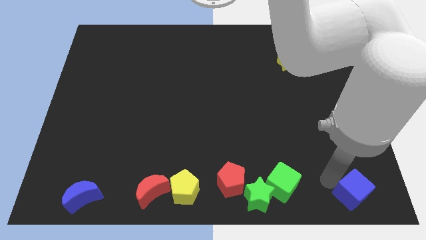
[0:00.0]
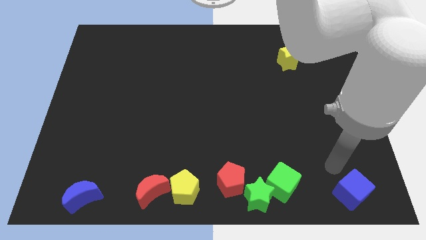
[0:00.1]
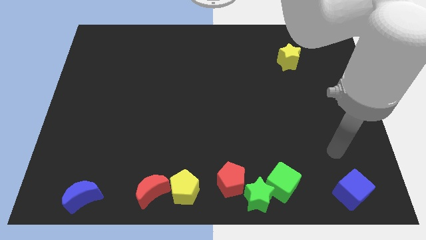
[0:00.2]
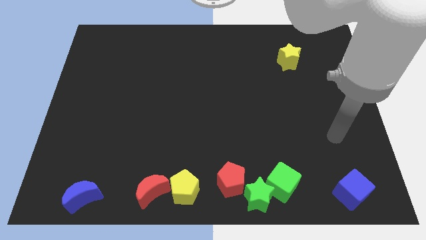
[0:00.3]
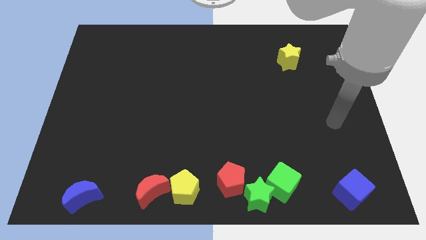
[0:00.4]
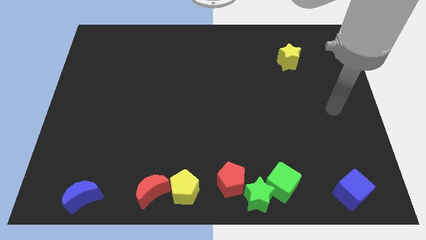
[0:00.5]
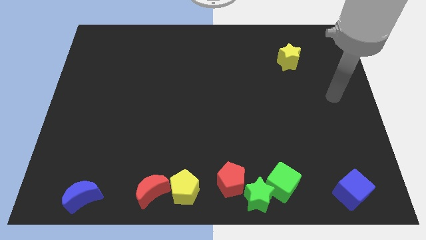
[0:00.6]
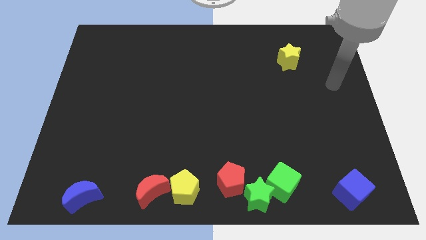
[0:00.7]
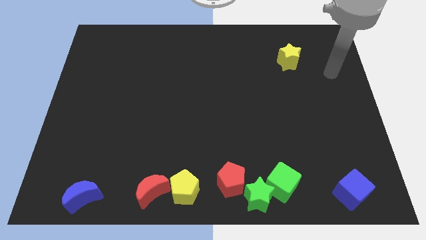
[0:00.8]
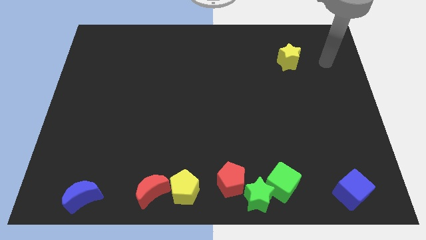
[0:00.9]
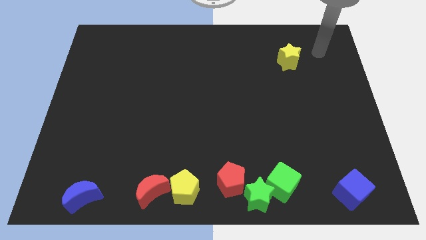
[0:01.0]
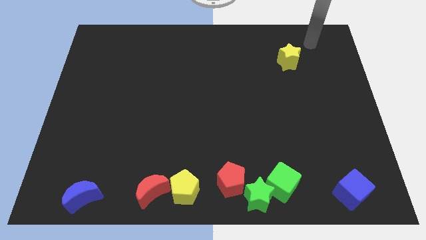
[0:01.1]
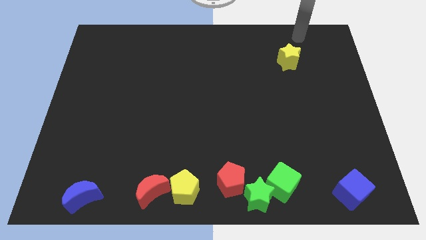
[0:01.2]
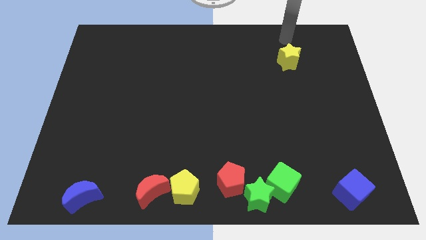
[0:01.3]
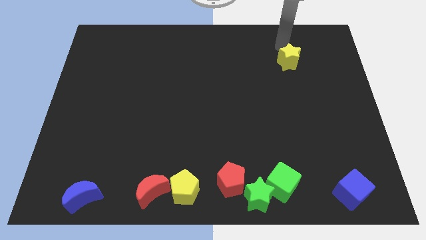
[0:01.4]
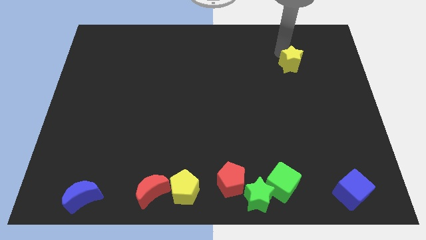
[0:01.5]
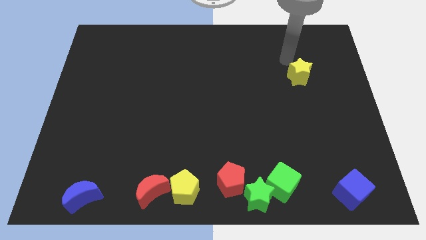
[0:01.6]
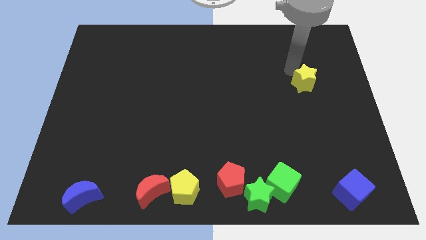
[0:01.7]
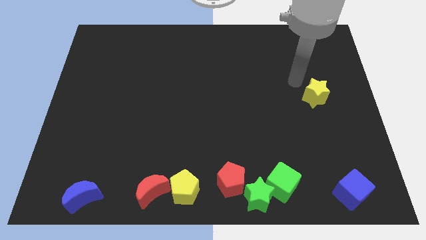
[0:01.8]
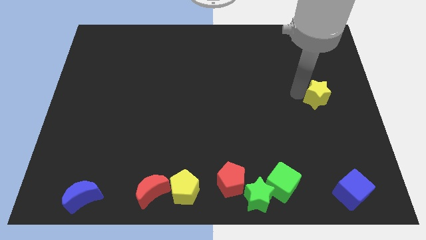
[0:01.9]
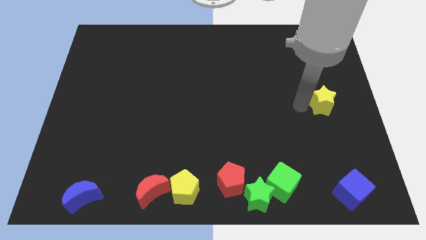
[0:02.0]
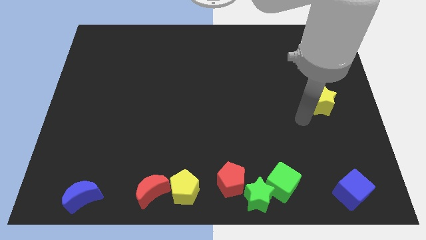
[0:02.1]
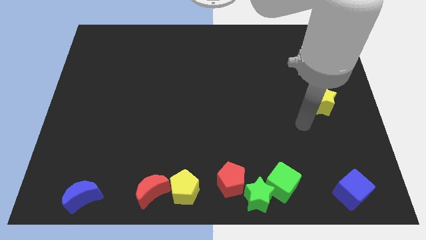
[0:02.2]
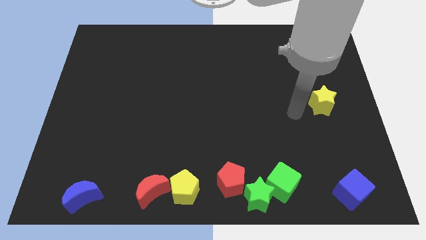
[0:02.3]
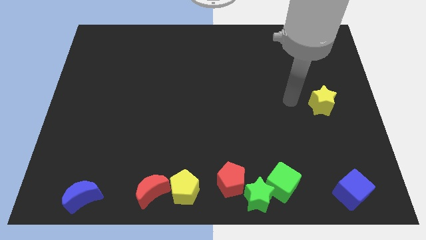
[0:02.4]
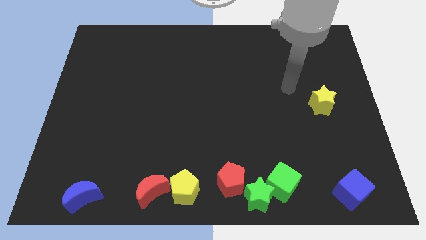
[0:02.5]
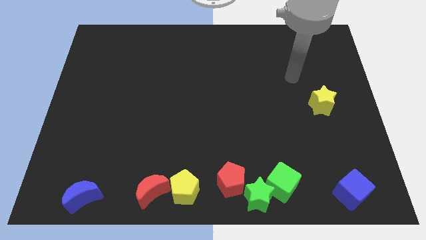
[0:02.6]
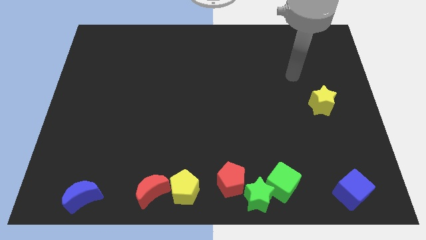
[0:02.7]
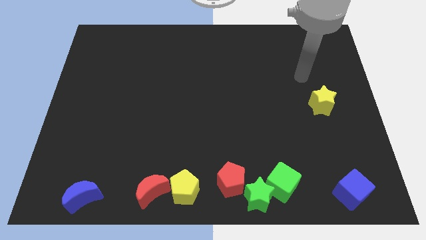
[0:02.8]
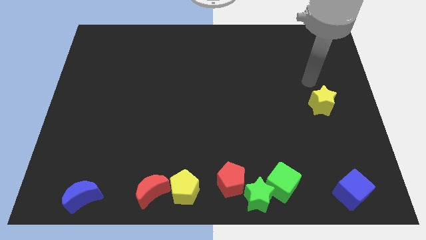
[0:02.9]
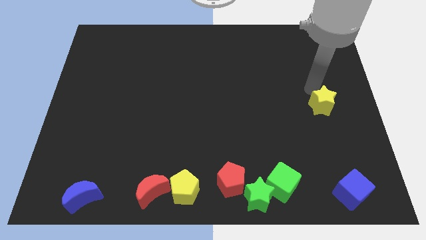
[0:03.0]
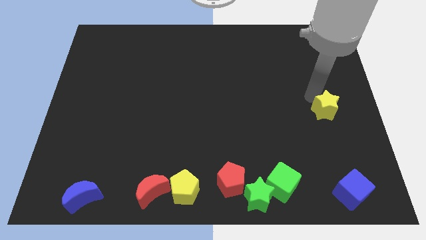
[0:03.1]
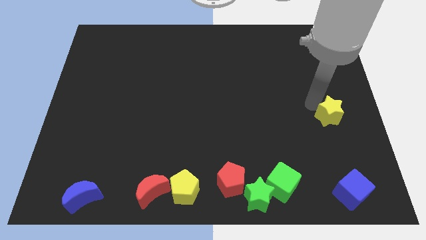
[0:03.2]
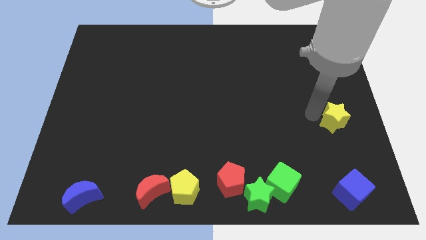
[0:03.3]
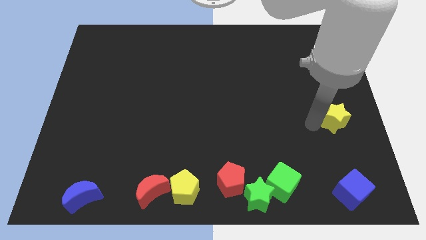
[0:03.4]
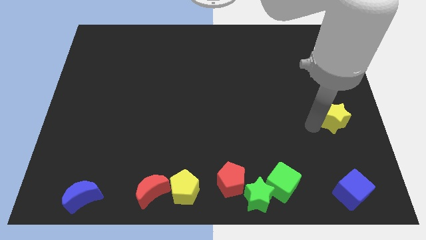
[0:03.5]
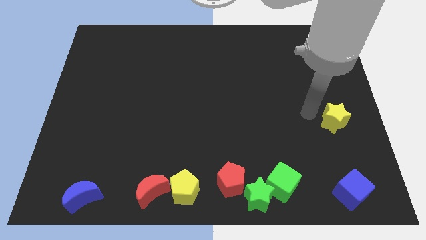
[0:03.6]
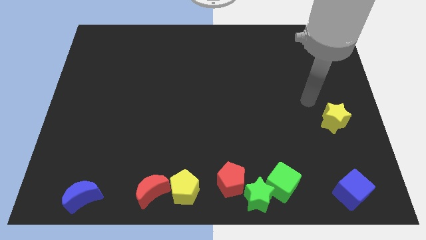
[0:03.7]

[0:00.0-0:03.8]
move your arm close to the yellow star

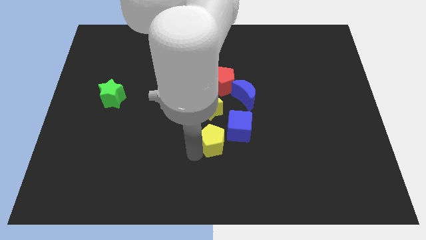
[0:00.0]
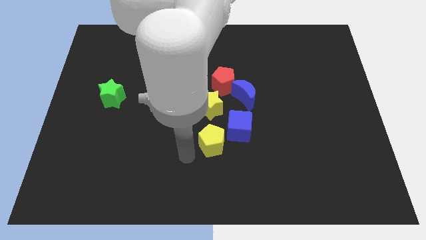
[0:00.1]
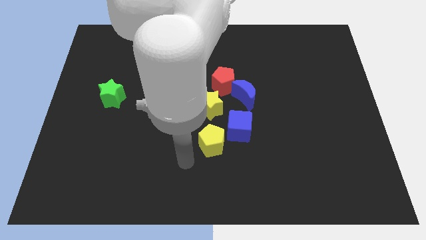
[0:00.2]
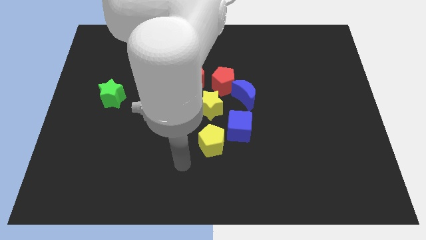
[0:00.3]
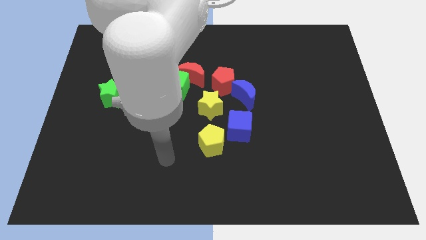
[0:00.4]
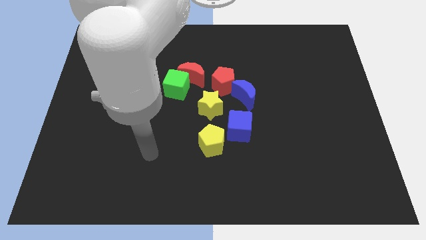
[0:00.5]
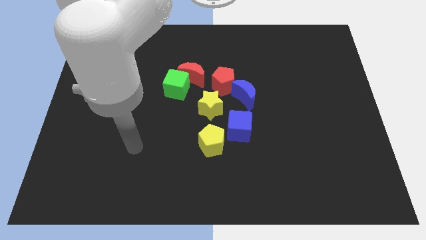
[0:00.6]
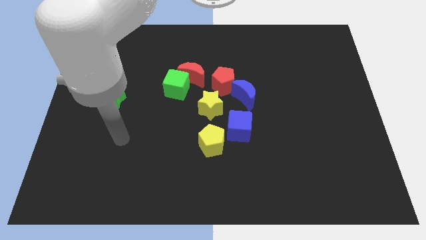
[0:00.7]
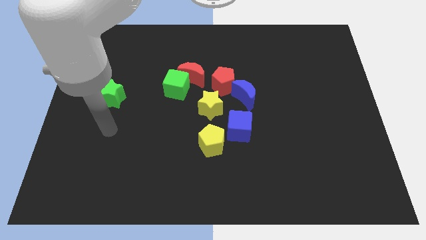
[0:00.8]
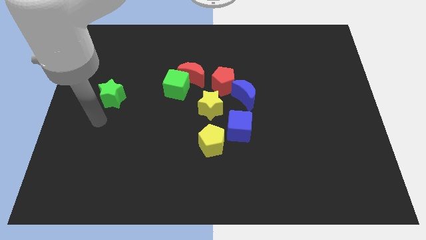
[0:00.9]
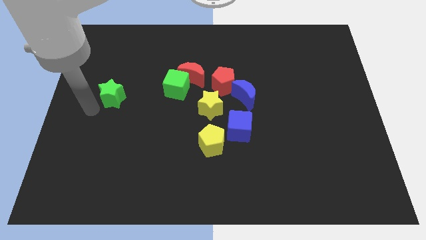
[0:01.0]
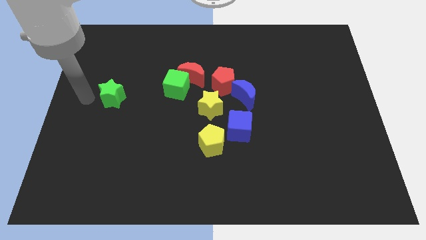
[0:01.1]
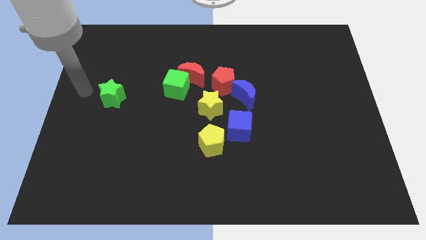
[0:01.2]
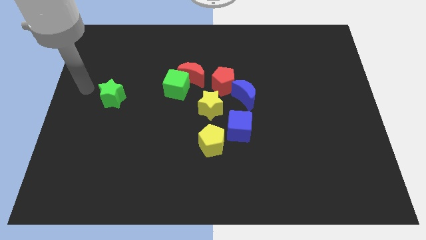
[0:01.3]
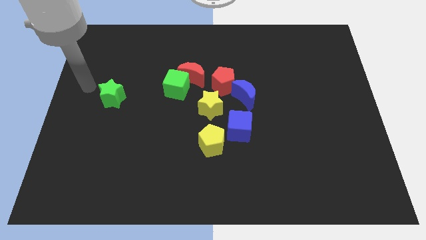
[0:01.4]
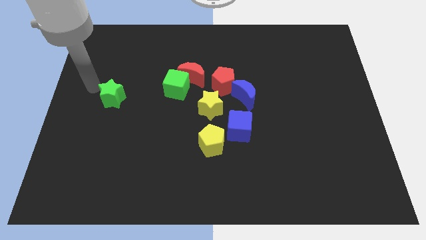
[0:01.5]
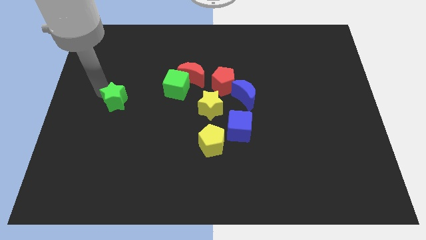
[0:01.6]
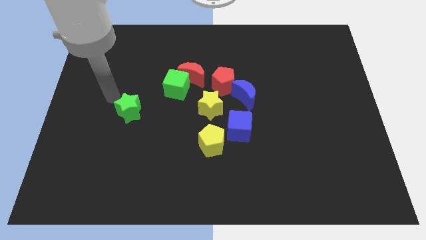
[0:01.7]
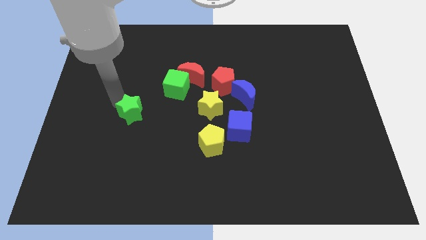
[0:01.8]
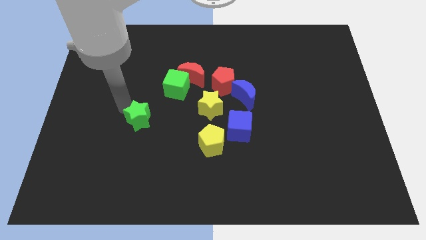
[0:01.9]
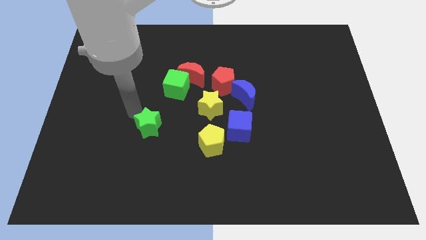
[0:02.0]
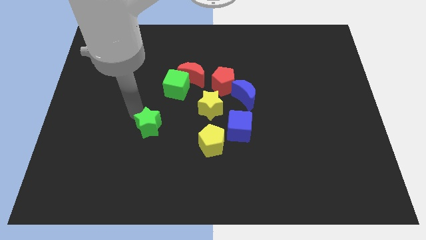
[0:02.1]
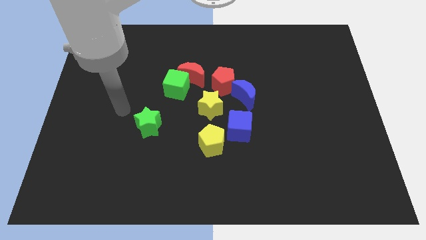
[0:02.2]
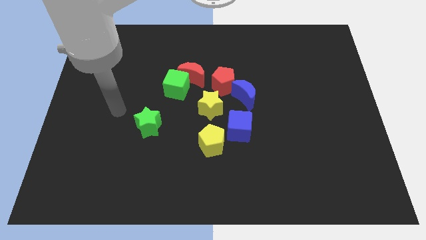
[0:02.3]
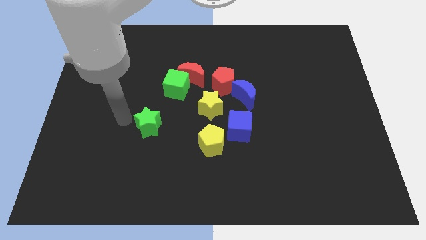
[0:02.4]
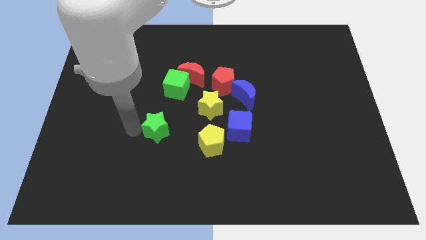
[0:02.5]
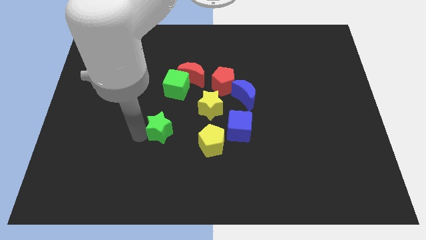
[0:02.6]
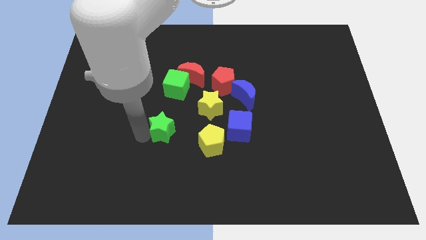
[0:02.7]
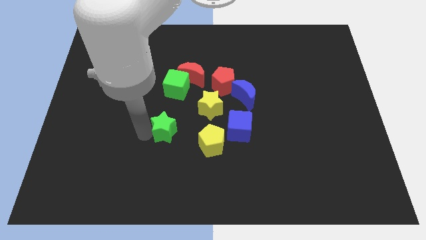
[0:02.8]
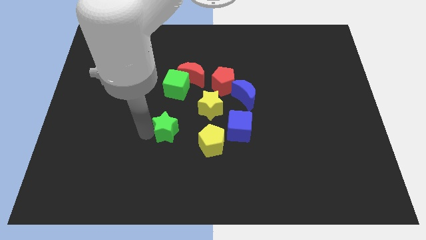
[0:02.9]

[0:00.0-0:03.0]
place the green star below the green cube

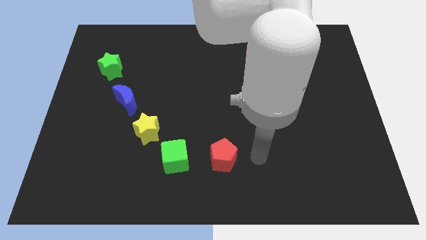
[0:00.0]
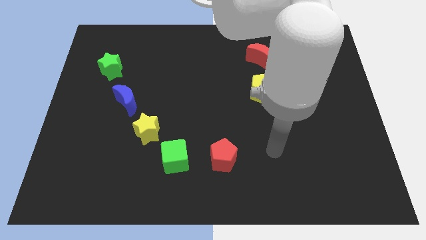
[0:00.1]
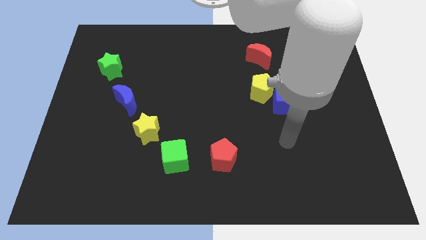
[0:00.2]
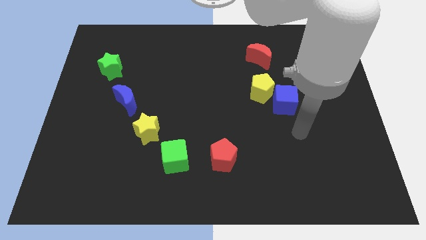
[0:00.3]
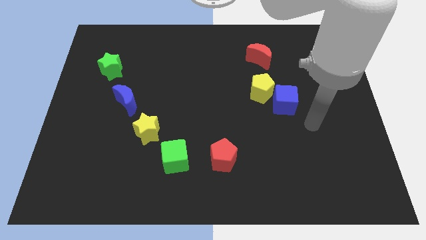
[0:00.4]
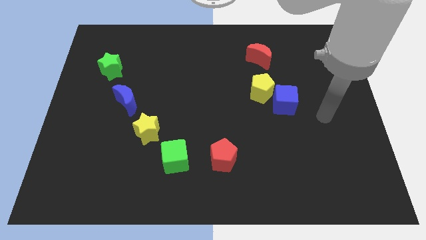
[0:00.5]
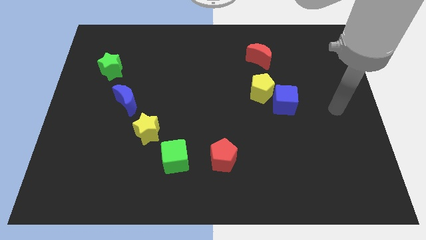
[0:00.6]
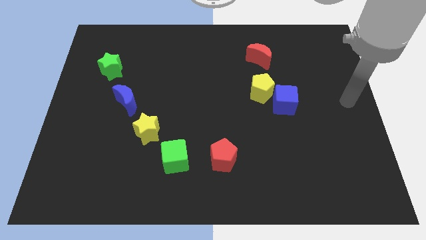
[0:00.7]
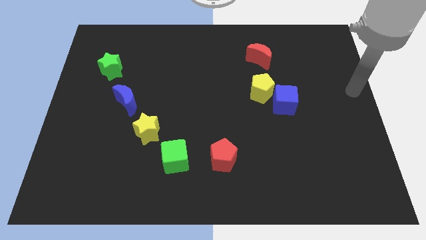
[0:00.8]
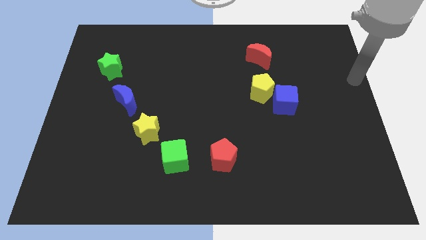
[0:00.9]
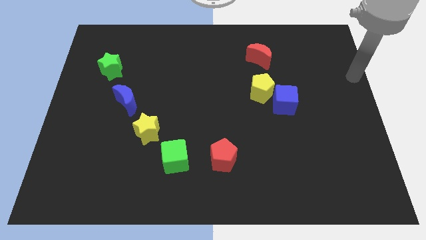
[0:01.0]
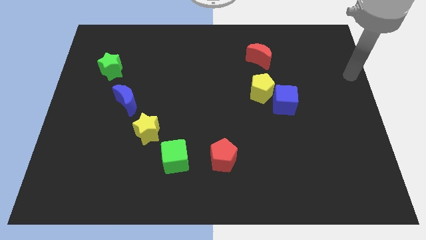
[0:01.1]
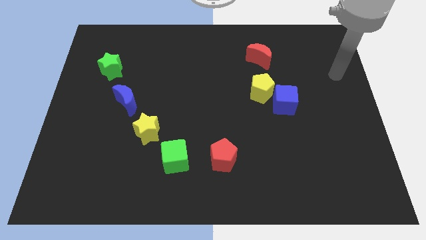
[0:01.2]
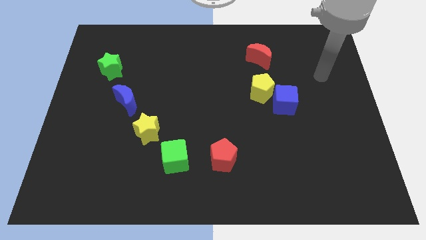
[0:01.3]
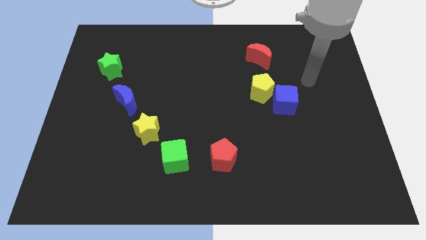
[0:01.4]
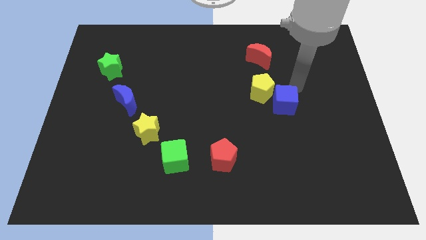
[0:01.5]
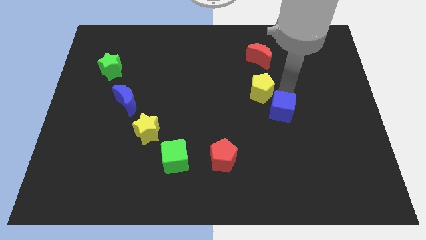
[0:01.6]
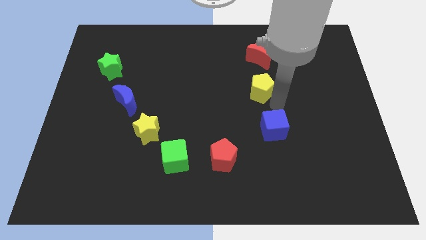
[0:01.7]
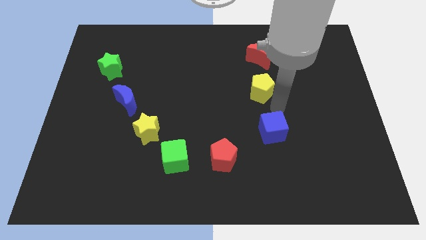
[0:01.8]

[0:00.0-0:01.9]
push the blue cube near to the red pentagon

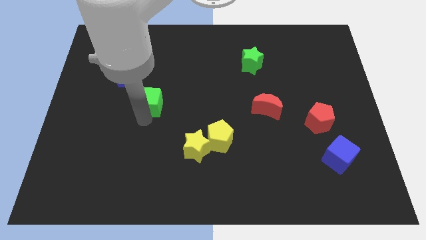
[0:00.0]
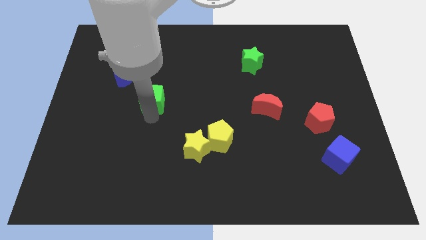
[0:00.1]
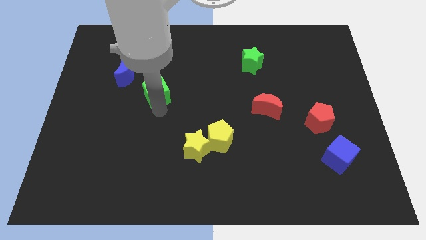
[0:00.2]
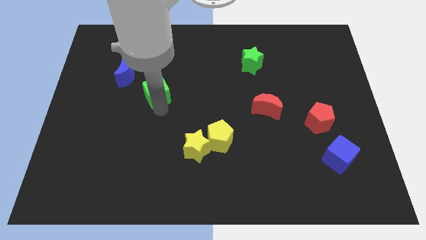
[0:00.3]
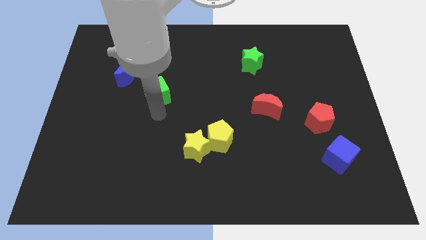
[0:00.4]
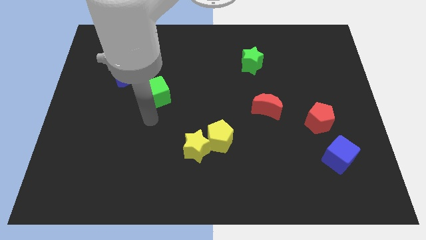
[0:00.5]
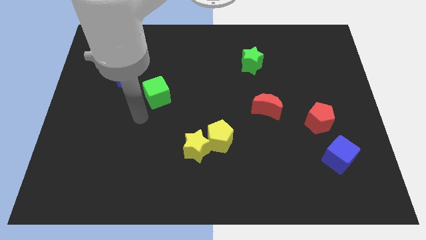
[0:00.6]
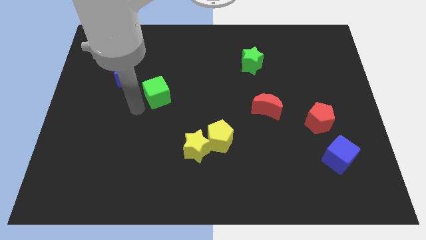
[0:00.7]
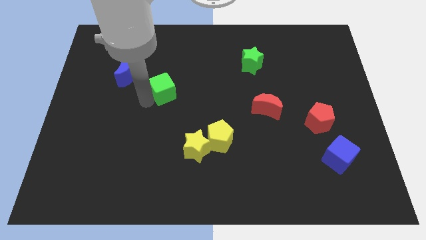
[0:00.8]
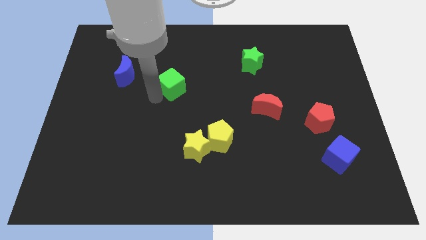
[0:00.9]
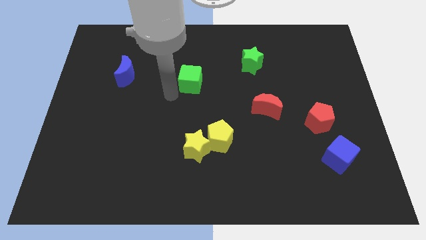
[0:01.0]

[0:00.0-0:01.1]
place green cube to the right of blue moon
